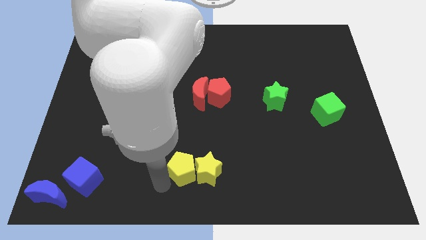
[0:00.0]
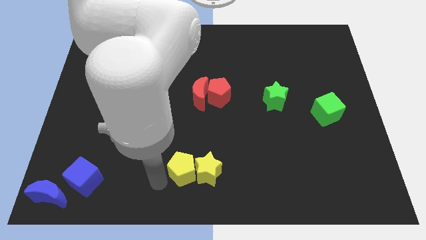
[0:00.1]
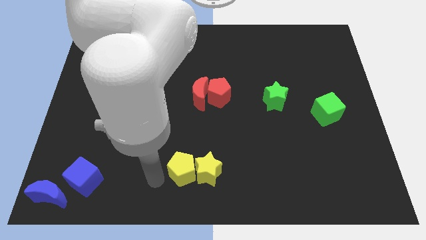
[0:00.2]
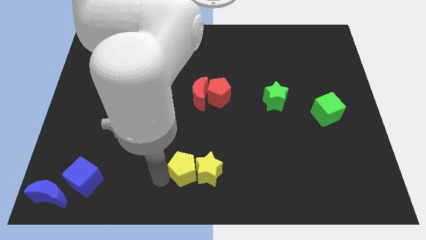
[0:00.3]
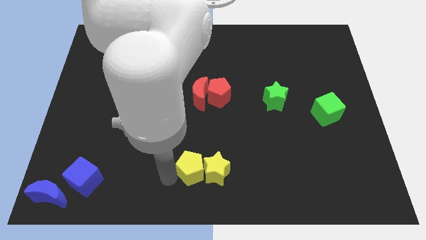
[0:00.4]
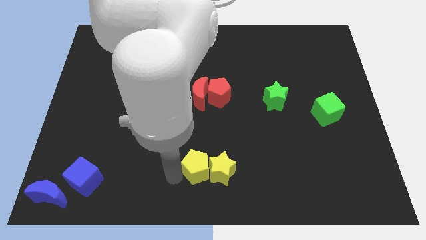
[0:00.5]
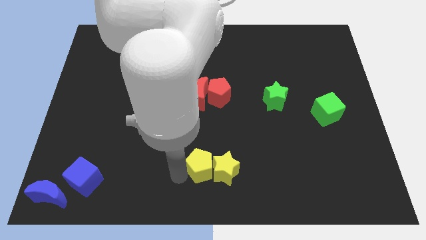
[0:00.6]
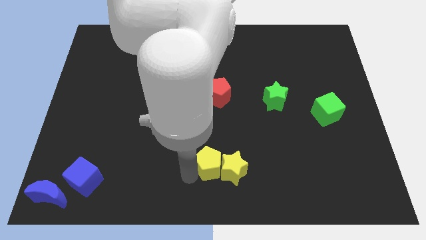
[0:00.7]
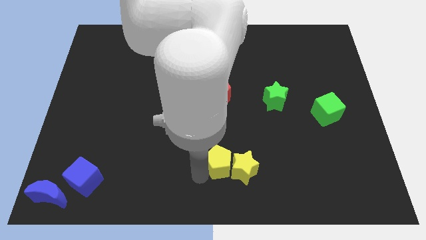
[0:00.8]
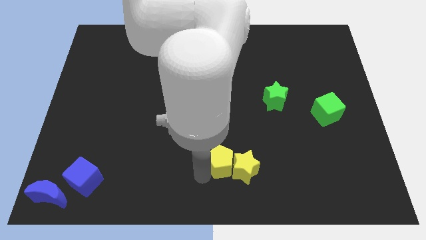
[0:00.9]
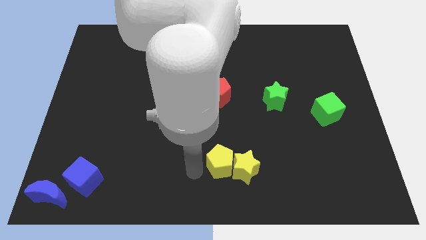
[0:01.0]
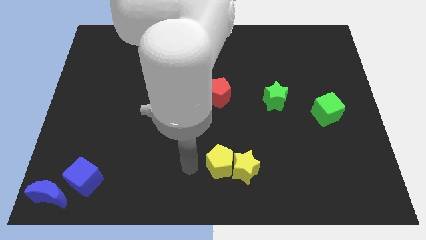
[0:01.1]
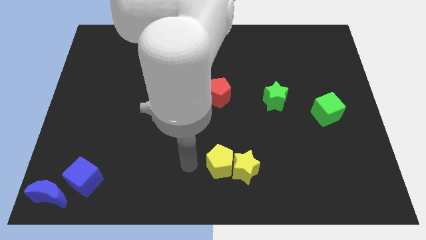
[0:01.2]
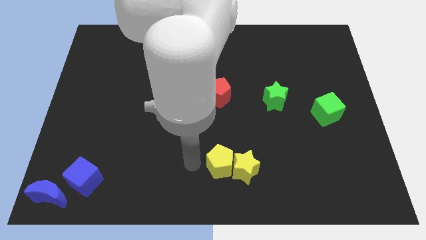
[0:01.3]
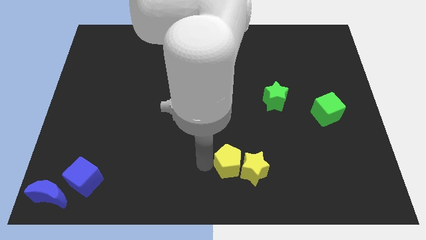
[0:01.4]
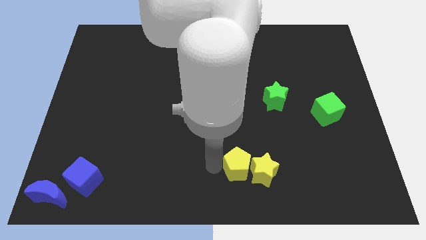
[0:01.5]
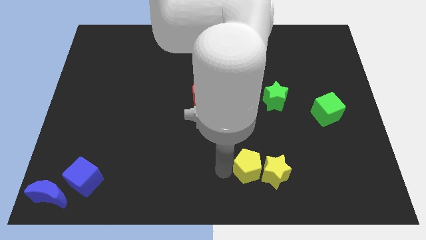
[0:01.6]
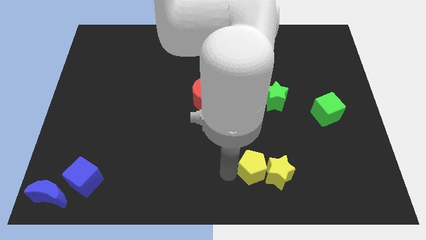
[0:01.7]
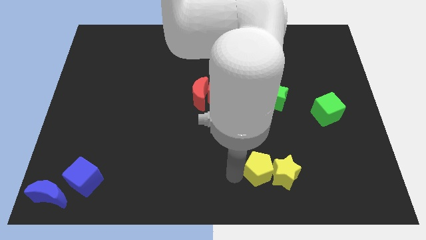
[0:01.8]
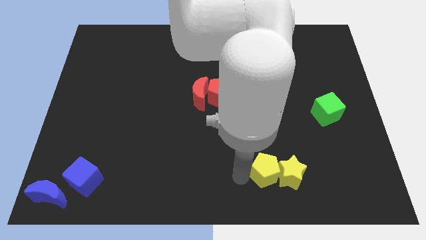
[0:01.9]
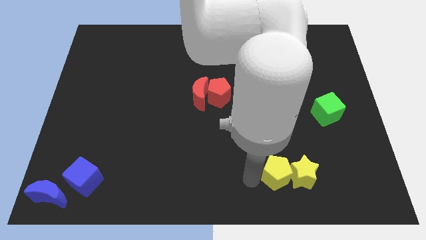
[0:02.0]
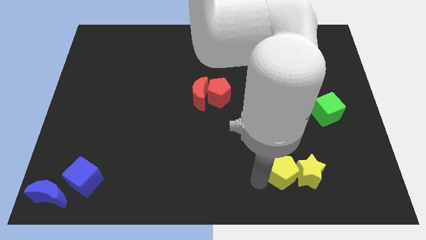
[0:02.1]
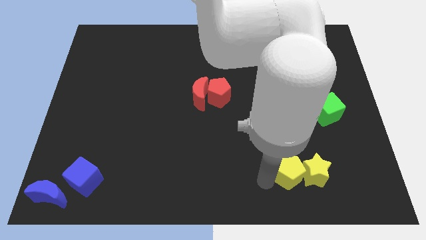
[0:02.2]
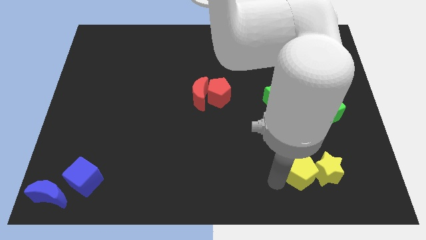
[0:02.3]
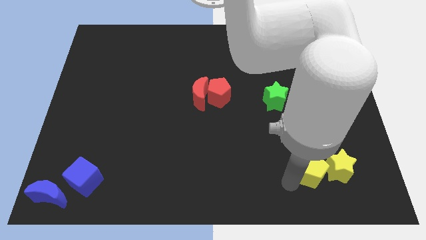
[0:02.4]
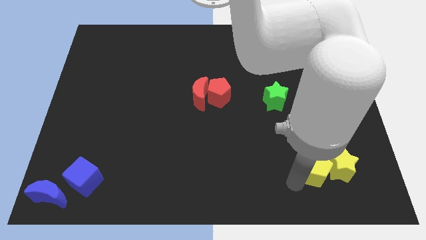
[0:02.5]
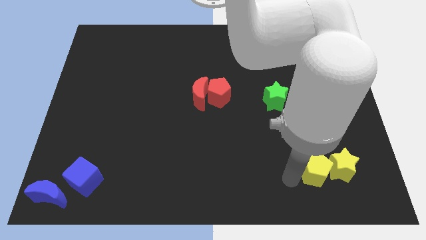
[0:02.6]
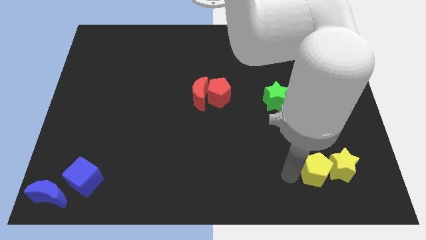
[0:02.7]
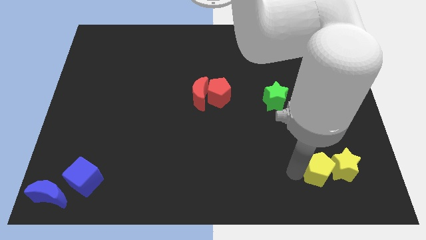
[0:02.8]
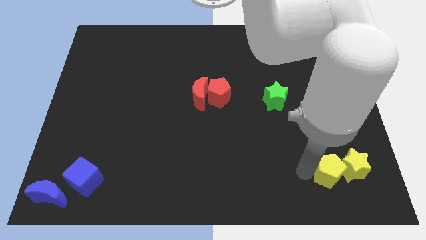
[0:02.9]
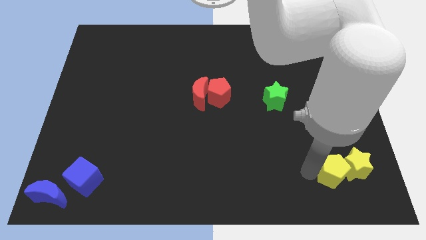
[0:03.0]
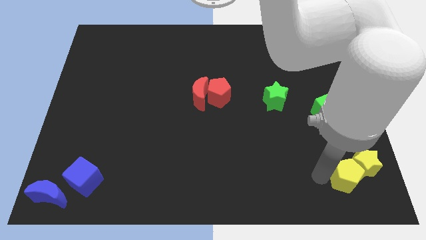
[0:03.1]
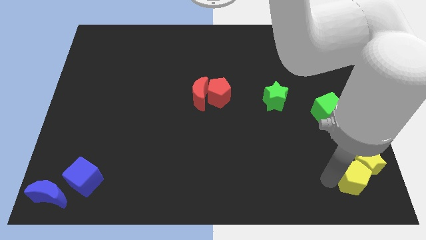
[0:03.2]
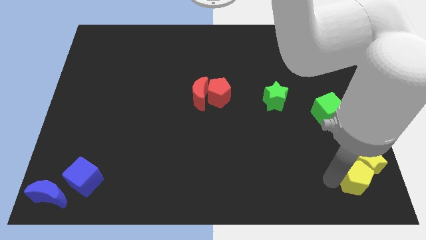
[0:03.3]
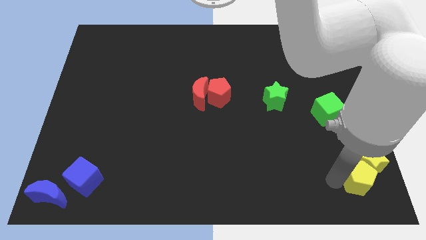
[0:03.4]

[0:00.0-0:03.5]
move yellow pentagon and yellow star towards right side of the board

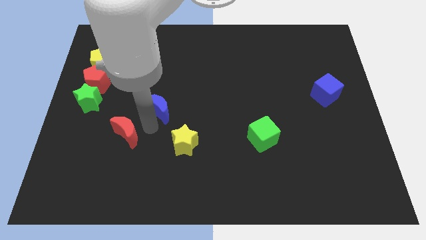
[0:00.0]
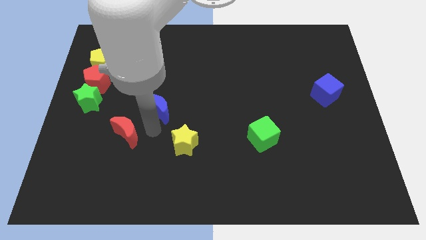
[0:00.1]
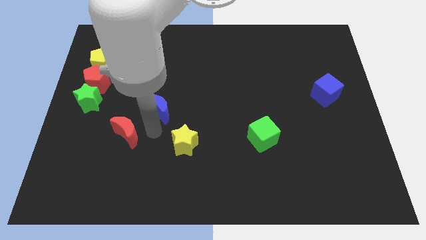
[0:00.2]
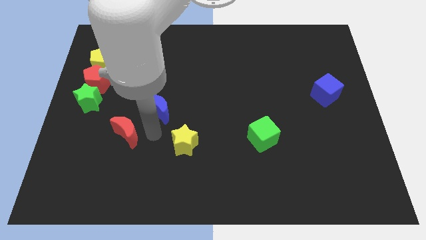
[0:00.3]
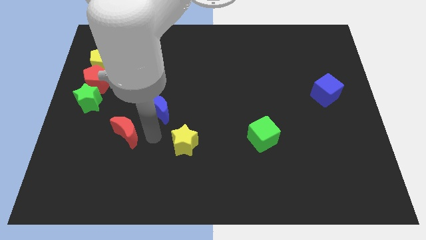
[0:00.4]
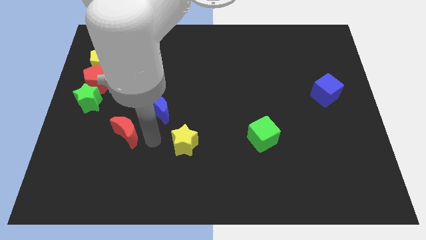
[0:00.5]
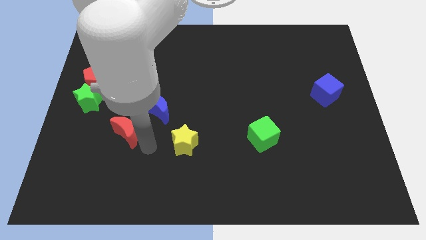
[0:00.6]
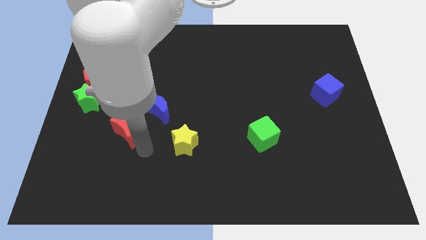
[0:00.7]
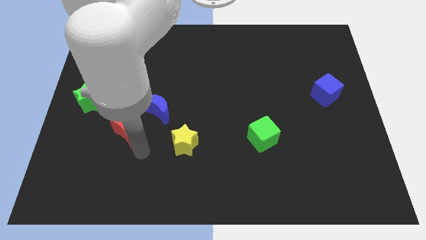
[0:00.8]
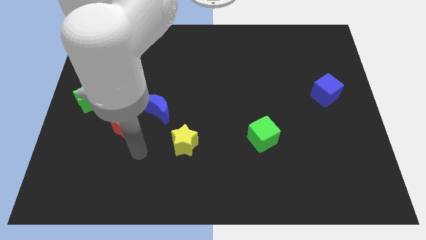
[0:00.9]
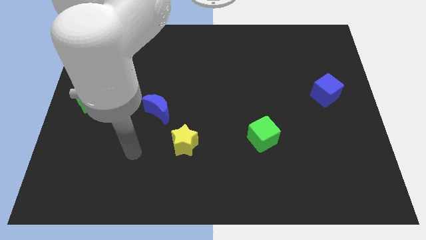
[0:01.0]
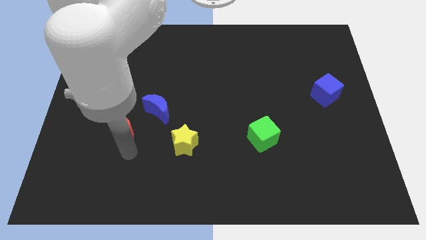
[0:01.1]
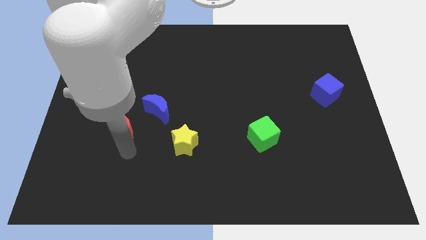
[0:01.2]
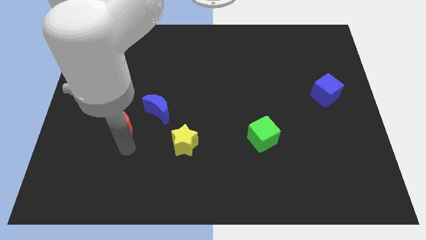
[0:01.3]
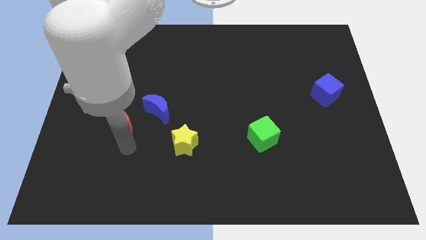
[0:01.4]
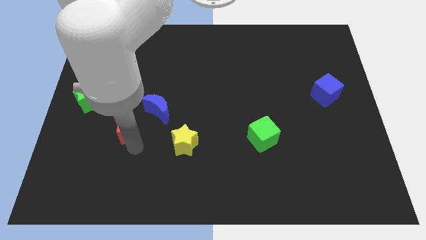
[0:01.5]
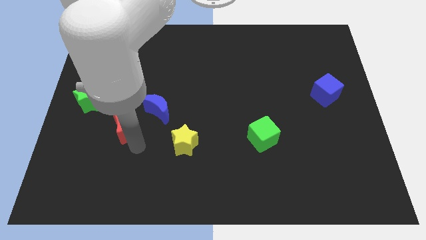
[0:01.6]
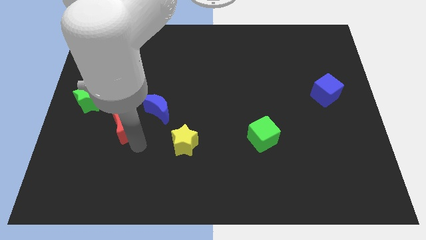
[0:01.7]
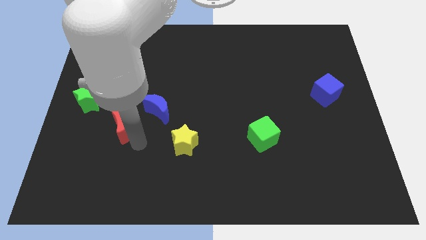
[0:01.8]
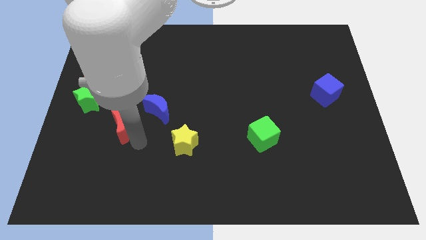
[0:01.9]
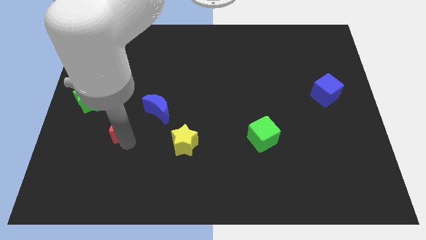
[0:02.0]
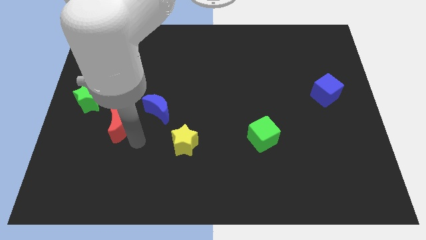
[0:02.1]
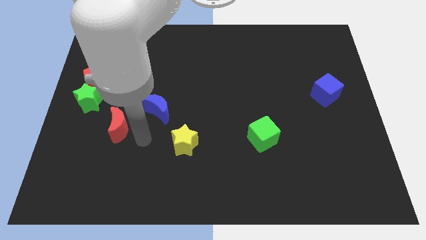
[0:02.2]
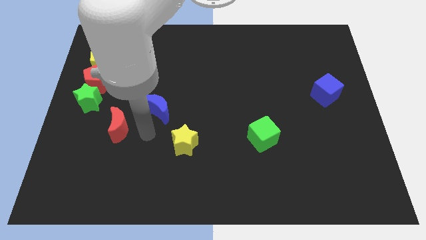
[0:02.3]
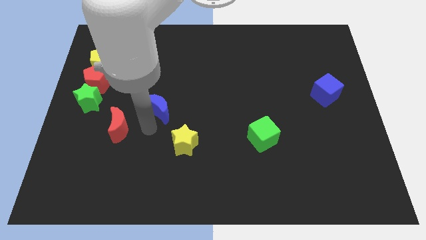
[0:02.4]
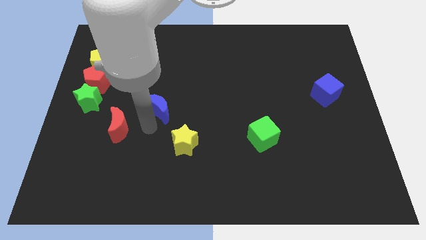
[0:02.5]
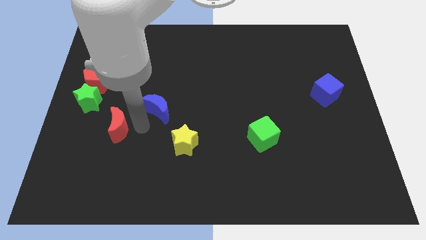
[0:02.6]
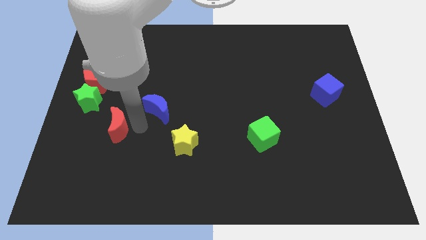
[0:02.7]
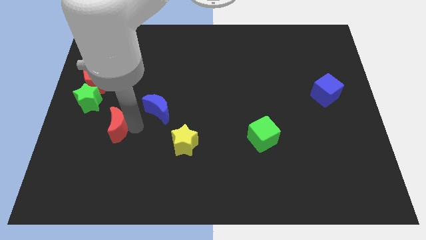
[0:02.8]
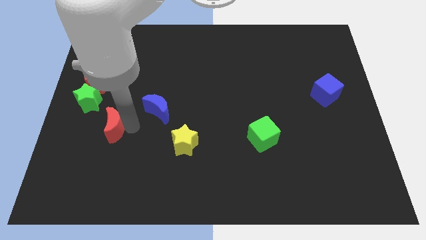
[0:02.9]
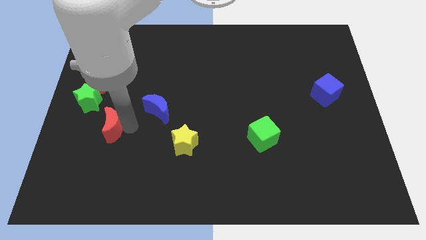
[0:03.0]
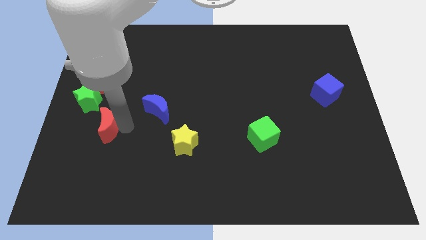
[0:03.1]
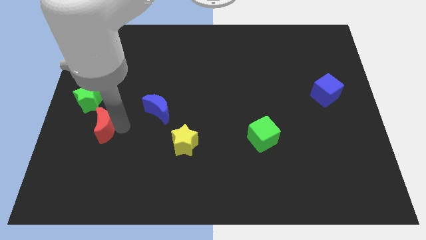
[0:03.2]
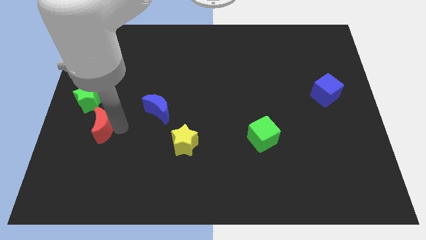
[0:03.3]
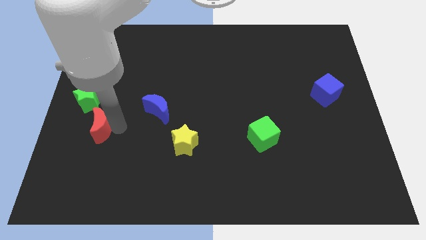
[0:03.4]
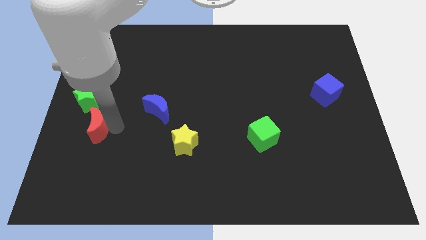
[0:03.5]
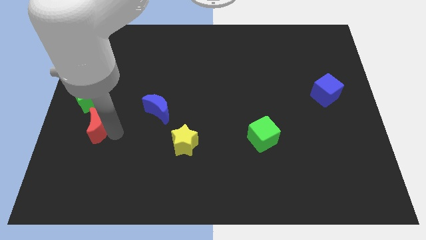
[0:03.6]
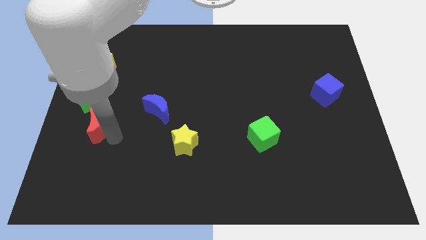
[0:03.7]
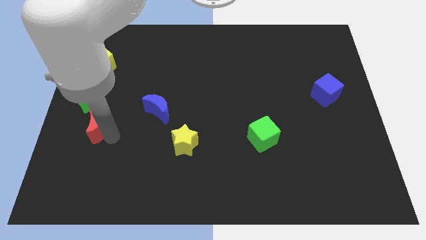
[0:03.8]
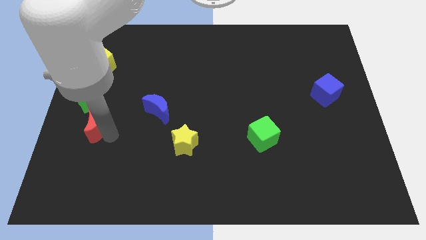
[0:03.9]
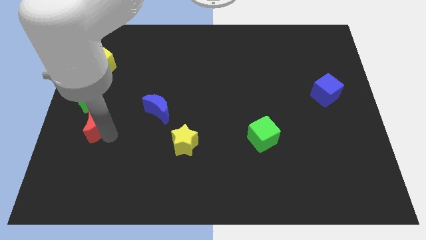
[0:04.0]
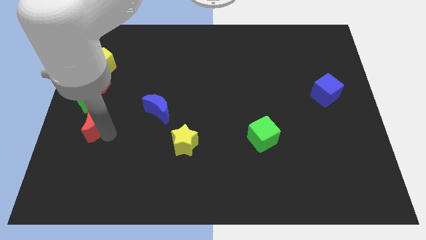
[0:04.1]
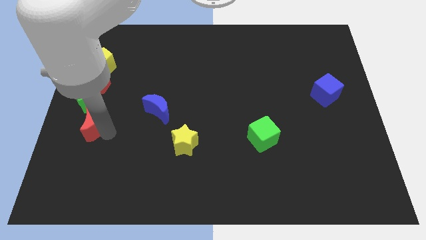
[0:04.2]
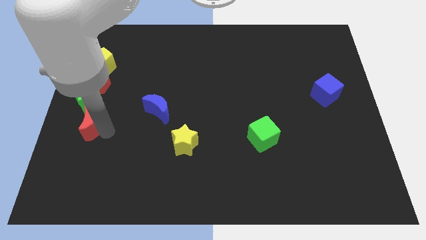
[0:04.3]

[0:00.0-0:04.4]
place red moon to the bottom of the green star

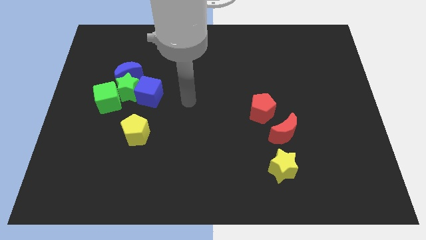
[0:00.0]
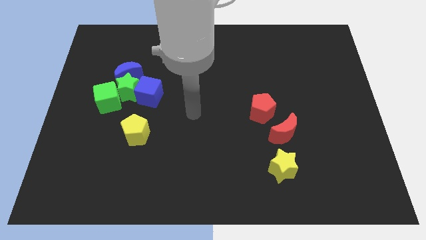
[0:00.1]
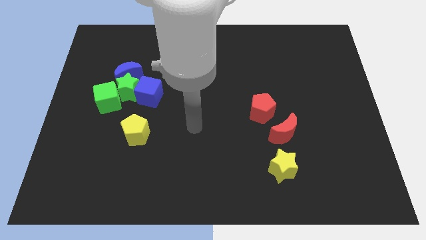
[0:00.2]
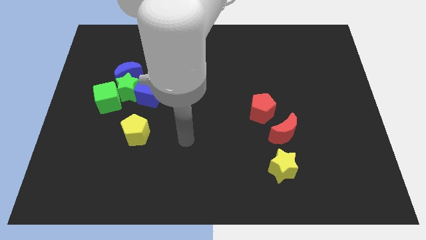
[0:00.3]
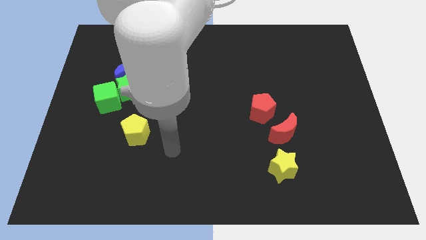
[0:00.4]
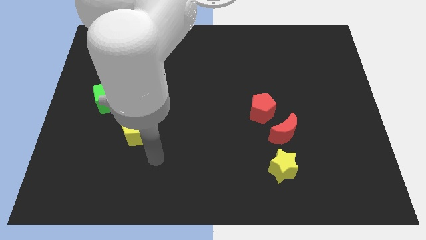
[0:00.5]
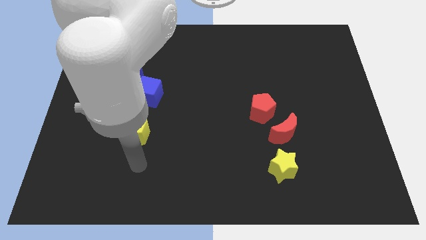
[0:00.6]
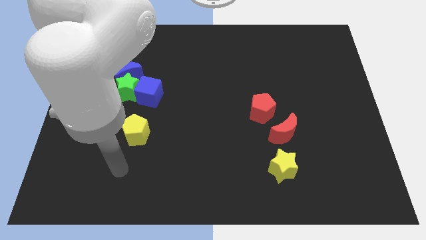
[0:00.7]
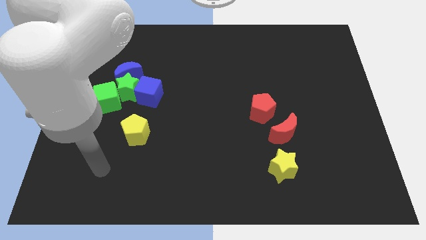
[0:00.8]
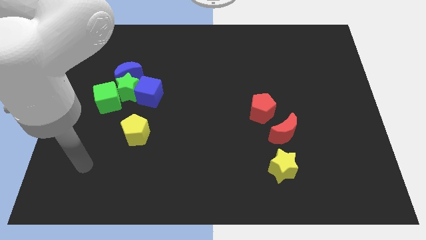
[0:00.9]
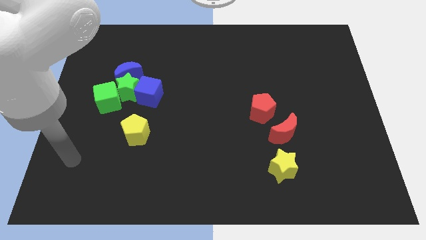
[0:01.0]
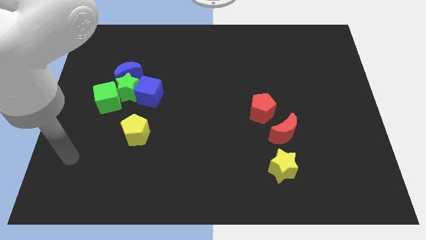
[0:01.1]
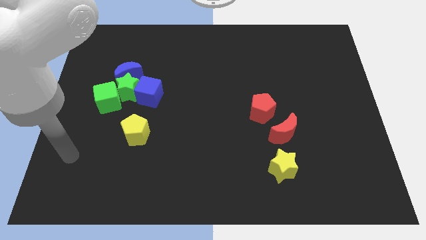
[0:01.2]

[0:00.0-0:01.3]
move your arm to the left side of the board
